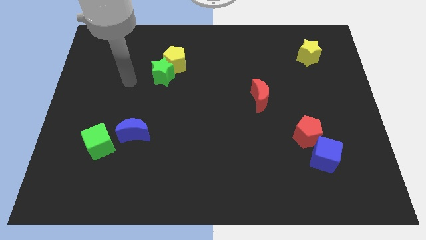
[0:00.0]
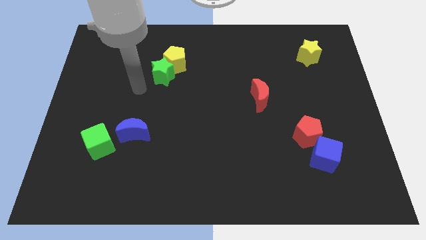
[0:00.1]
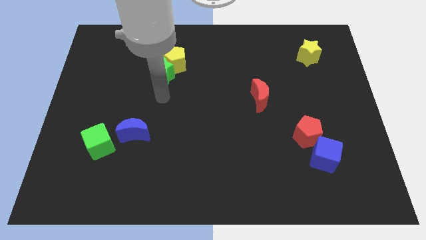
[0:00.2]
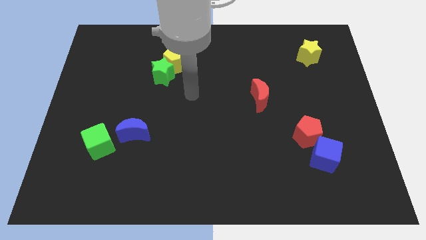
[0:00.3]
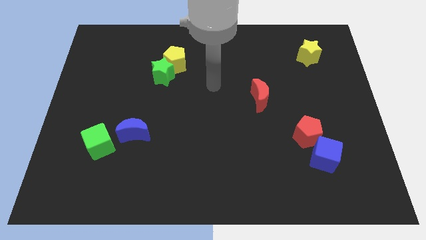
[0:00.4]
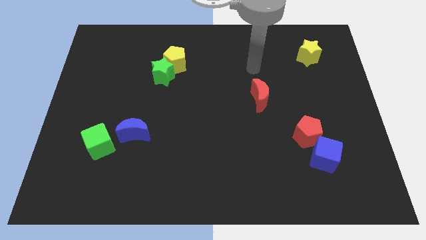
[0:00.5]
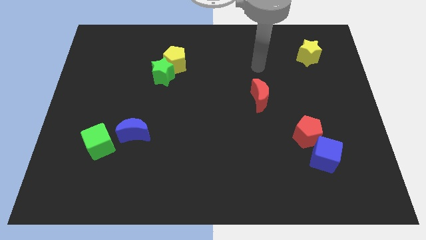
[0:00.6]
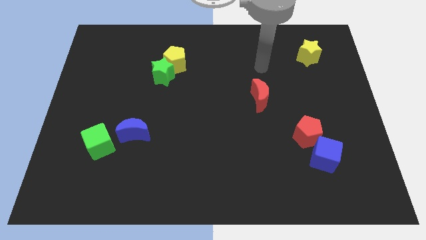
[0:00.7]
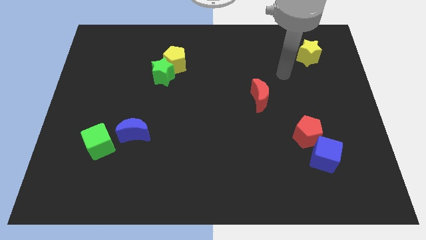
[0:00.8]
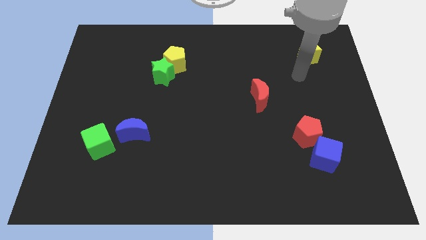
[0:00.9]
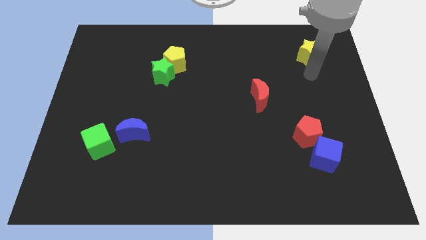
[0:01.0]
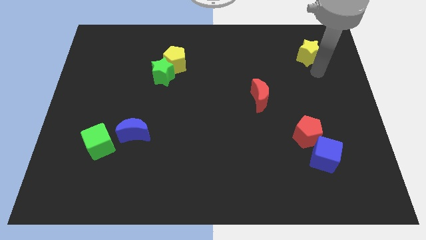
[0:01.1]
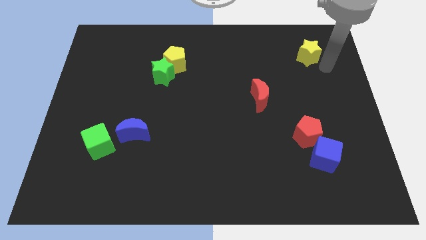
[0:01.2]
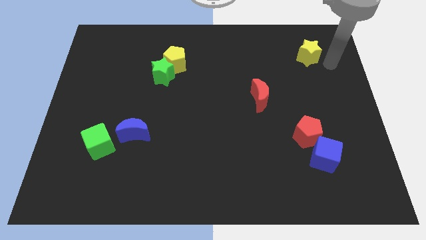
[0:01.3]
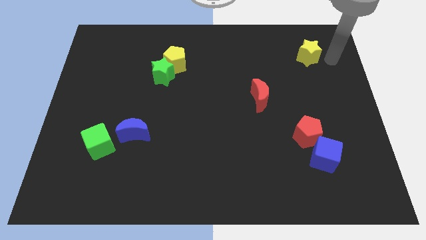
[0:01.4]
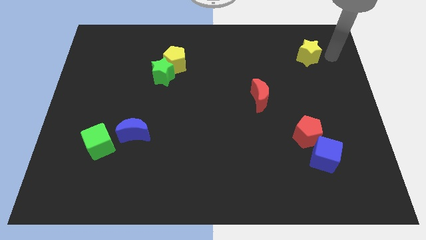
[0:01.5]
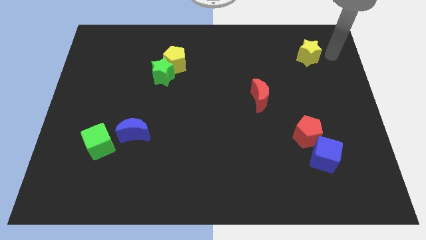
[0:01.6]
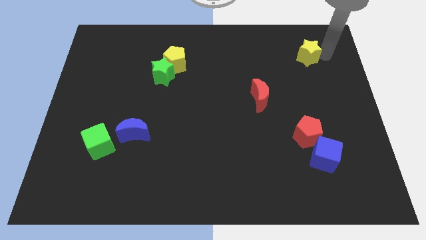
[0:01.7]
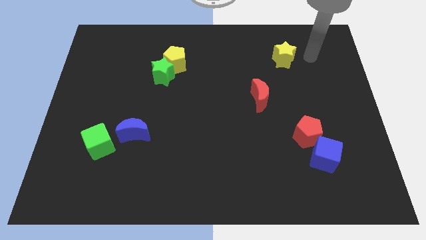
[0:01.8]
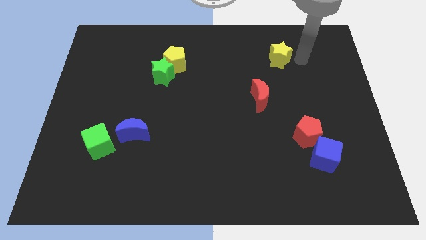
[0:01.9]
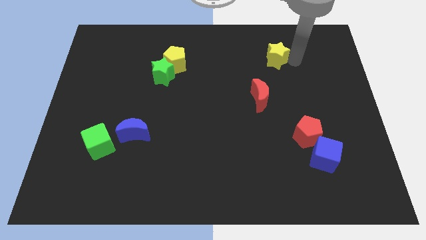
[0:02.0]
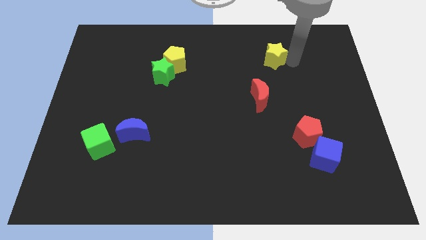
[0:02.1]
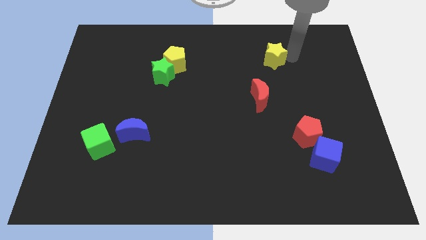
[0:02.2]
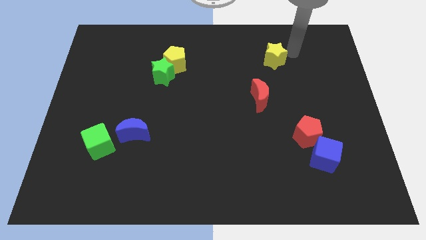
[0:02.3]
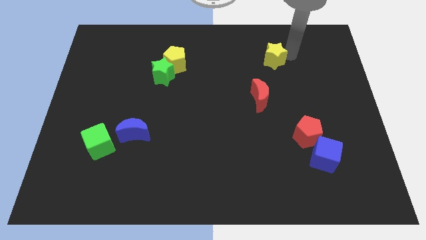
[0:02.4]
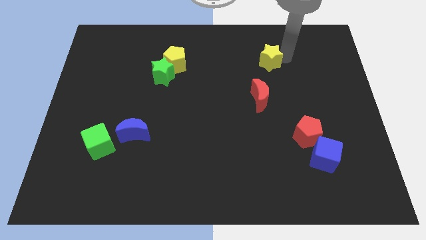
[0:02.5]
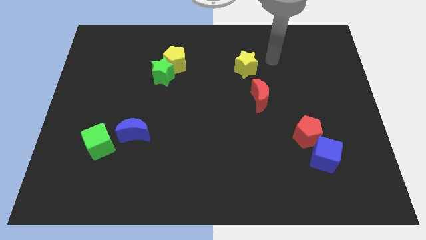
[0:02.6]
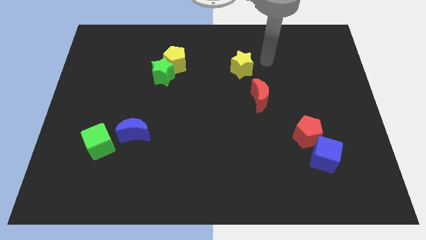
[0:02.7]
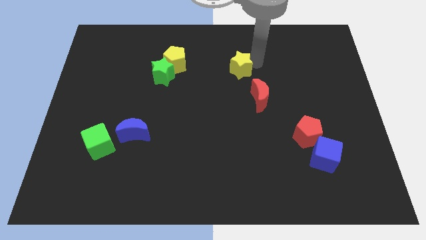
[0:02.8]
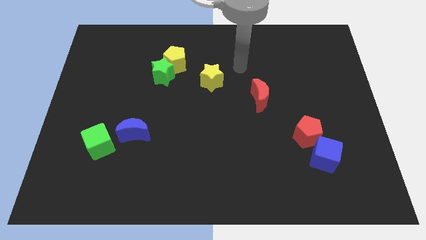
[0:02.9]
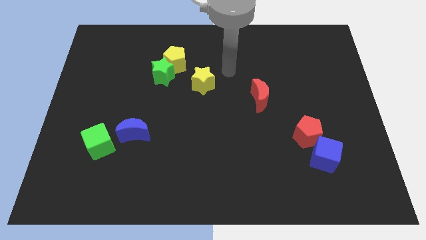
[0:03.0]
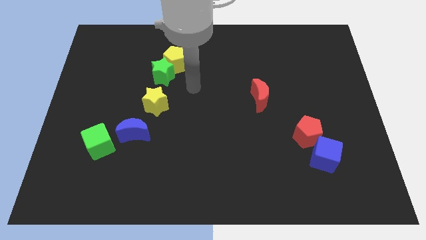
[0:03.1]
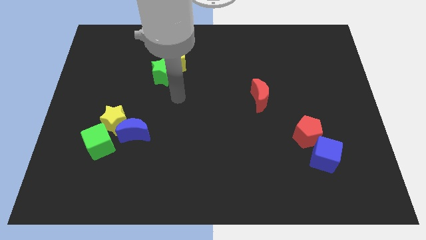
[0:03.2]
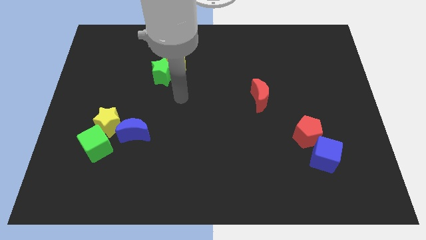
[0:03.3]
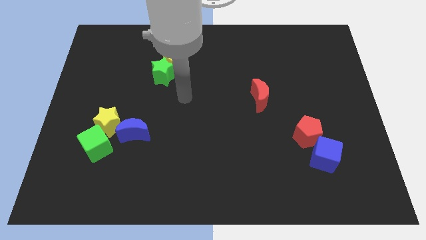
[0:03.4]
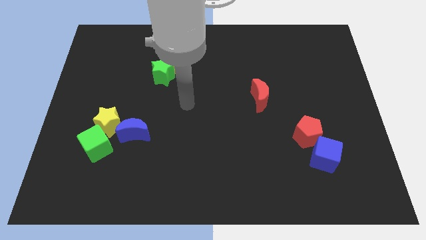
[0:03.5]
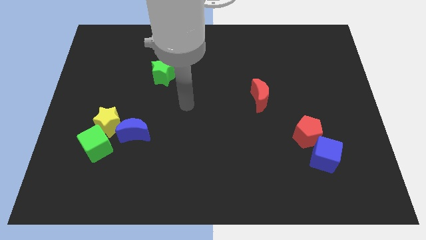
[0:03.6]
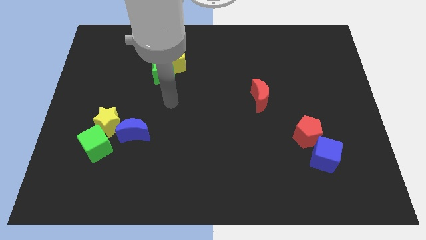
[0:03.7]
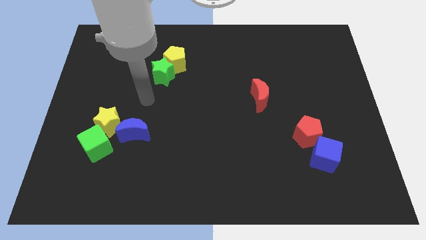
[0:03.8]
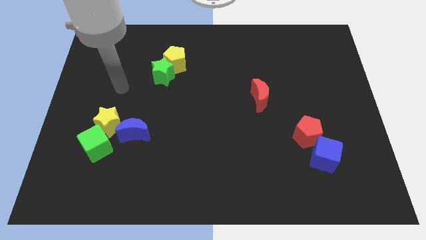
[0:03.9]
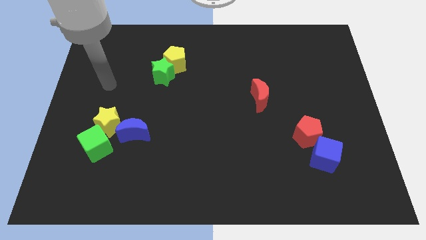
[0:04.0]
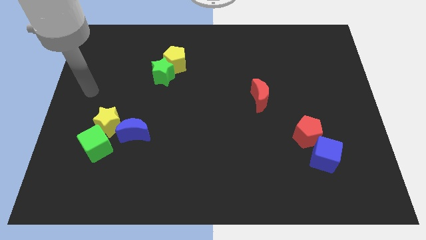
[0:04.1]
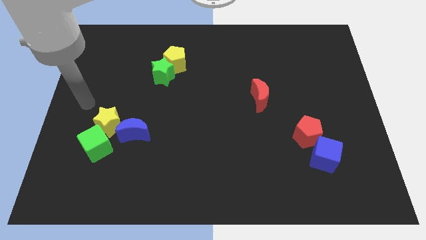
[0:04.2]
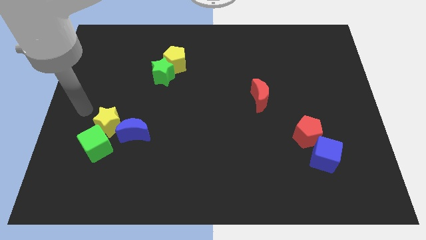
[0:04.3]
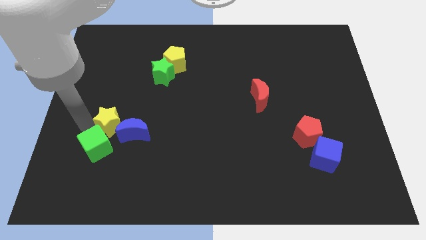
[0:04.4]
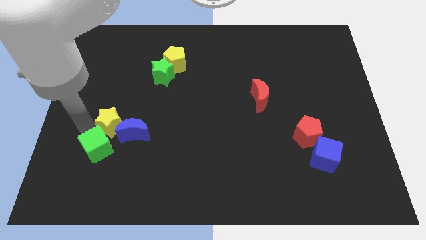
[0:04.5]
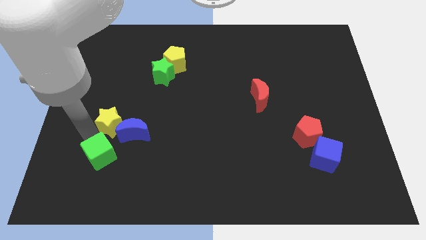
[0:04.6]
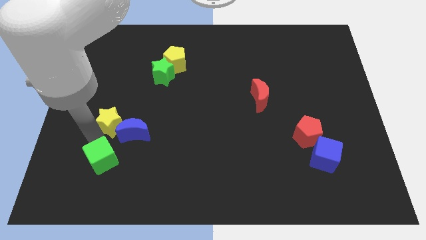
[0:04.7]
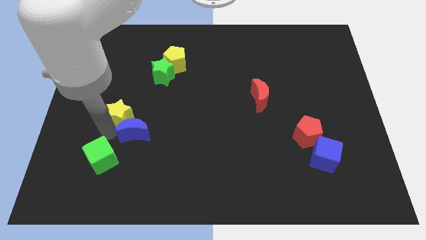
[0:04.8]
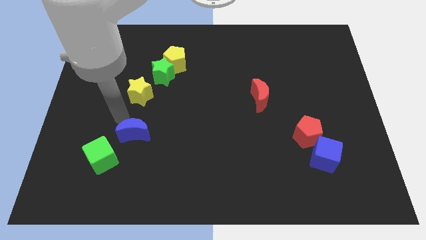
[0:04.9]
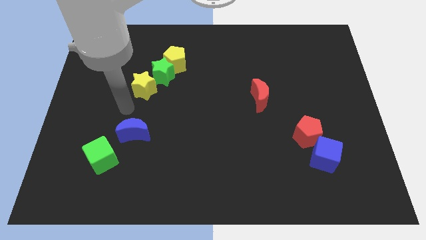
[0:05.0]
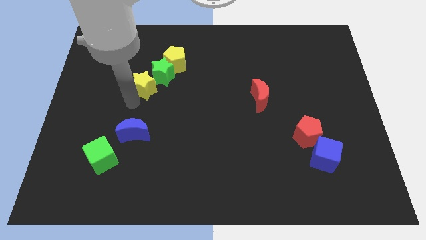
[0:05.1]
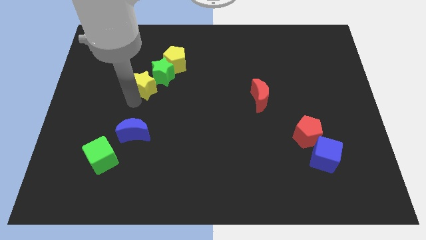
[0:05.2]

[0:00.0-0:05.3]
push the yellow star close to the green star

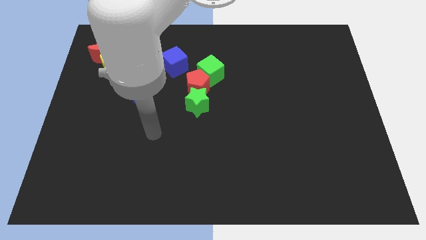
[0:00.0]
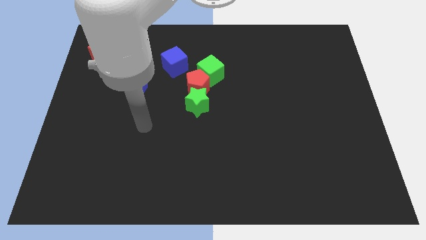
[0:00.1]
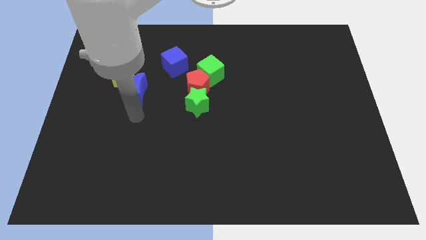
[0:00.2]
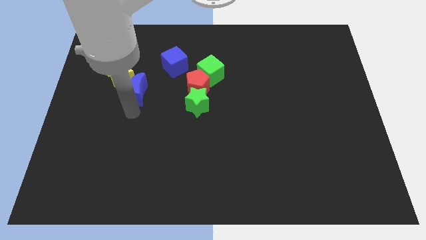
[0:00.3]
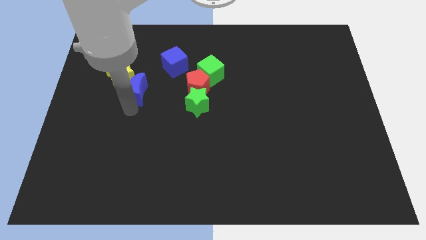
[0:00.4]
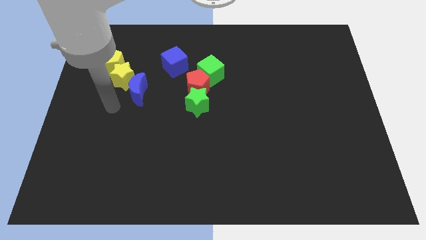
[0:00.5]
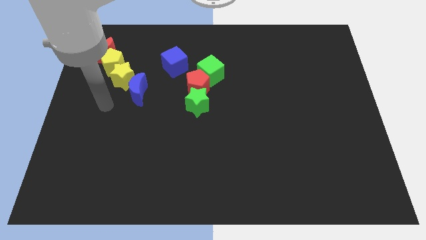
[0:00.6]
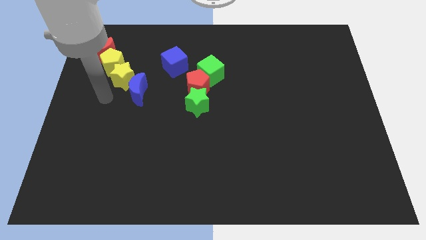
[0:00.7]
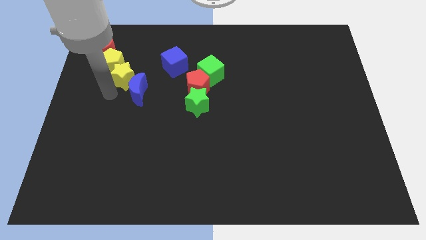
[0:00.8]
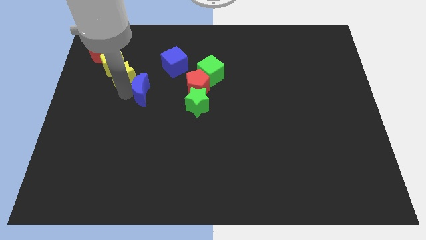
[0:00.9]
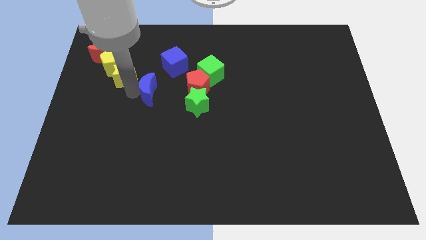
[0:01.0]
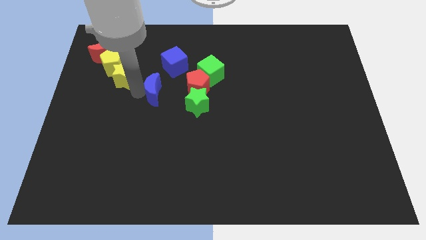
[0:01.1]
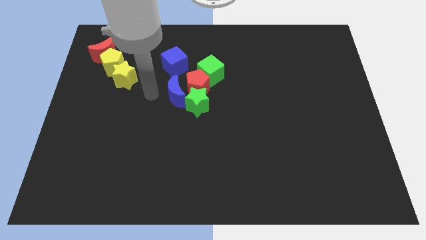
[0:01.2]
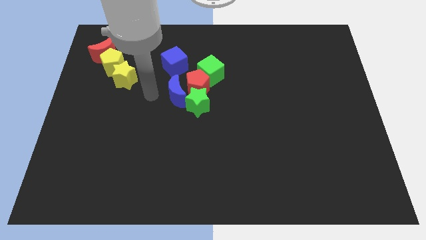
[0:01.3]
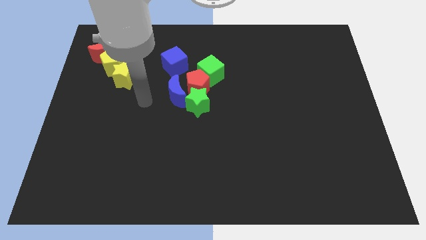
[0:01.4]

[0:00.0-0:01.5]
move the blue moon next to the red pentagon

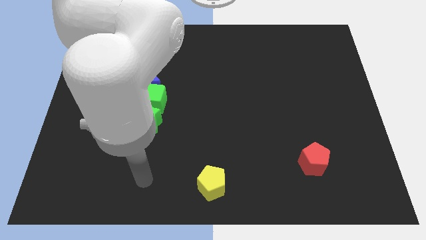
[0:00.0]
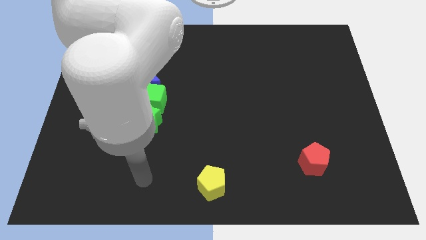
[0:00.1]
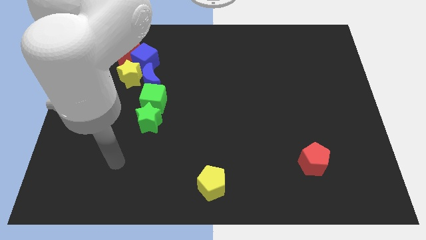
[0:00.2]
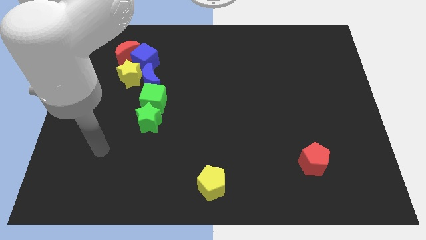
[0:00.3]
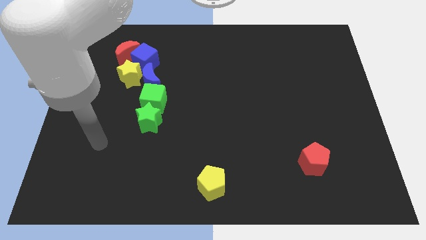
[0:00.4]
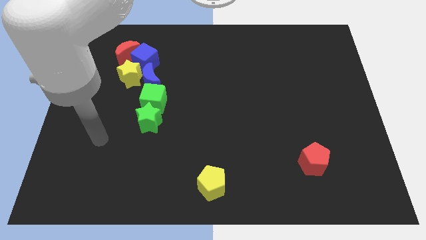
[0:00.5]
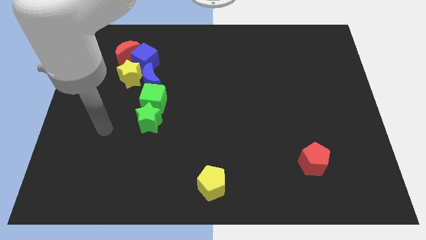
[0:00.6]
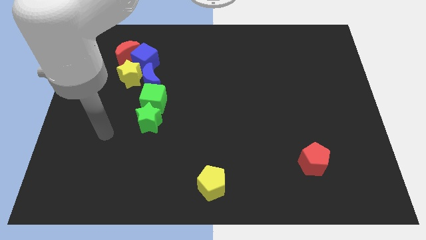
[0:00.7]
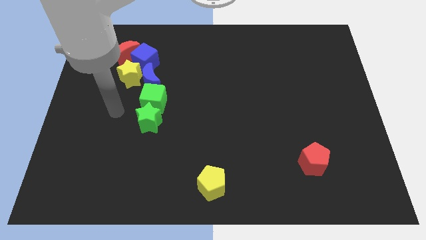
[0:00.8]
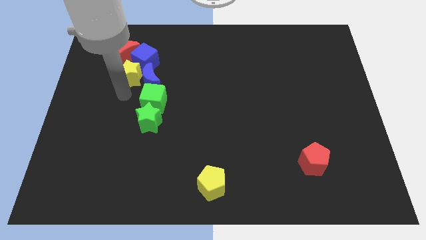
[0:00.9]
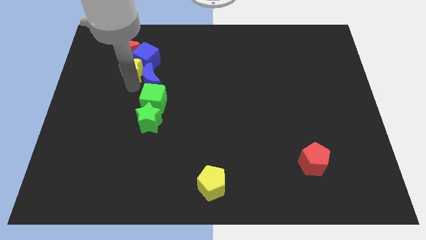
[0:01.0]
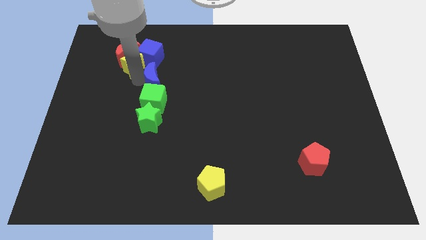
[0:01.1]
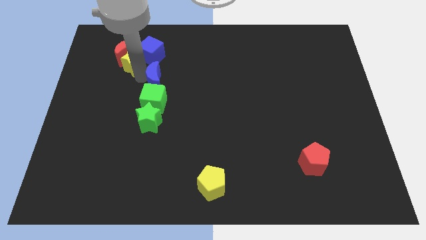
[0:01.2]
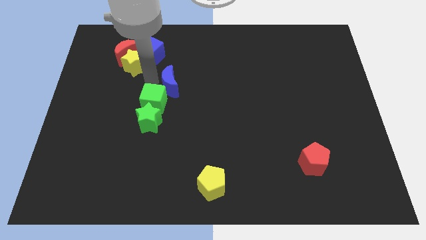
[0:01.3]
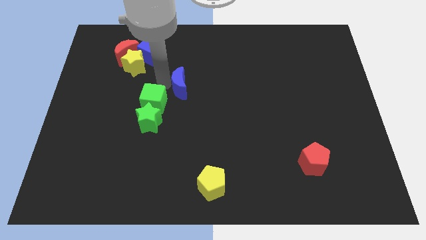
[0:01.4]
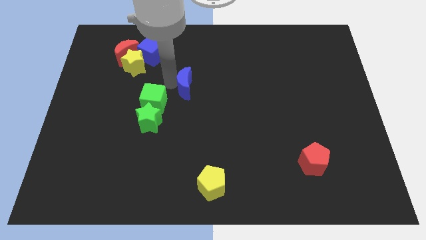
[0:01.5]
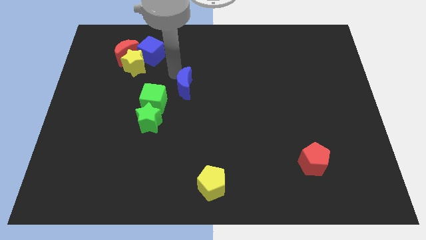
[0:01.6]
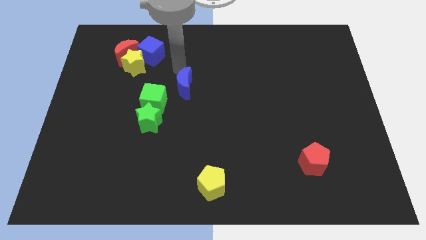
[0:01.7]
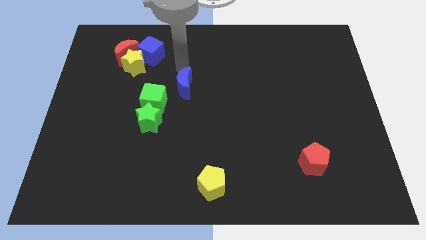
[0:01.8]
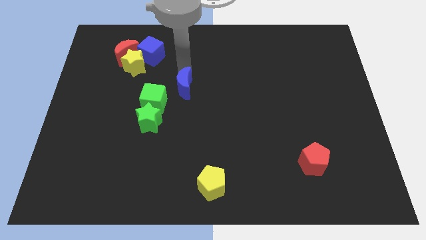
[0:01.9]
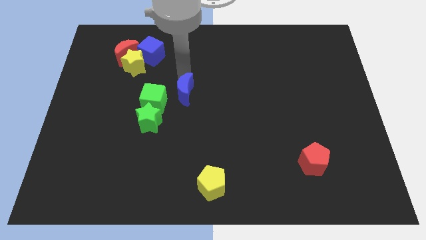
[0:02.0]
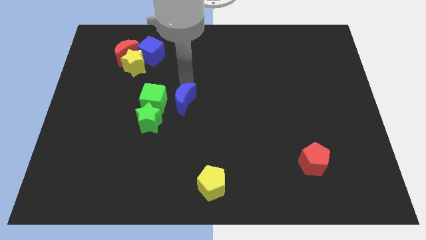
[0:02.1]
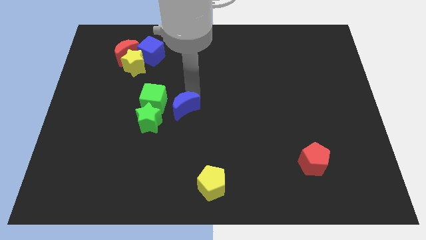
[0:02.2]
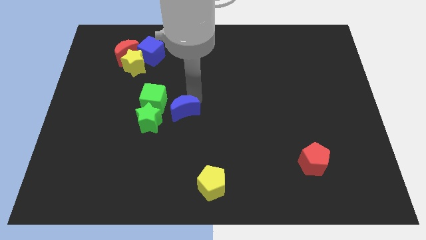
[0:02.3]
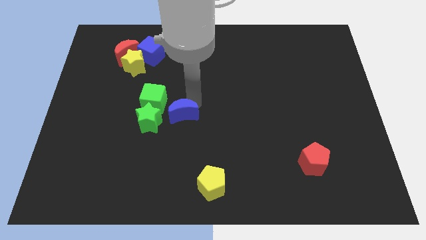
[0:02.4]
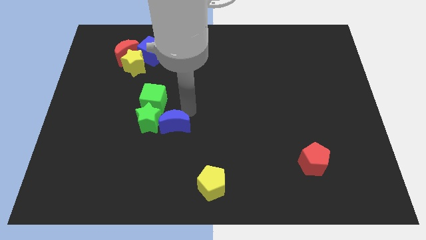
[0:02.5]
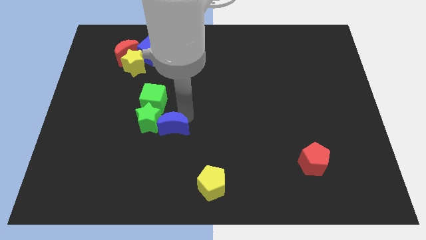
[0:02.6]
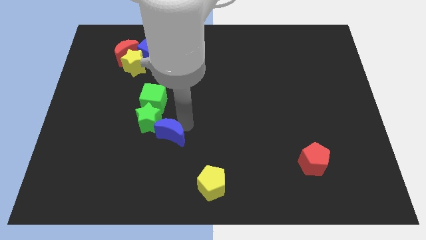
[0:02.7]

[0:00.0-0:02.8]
push the blue moon to the green star
